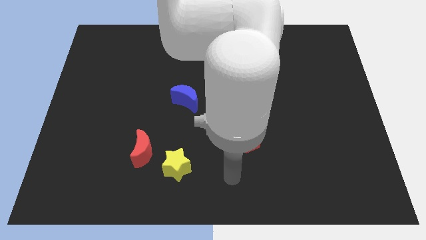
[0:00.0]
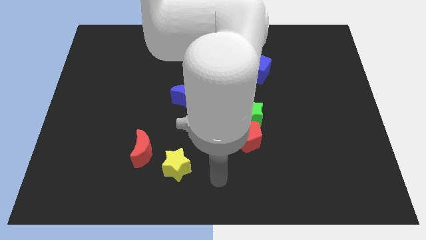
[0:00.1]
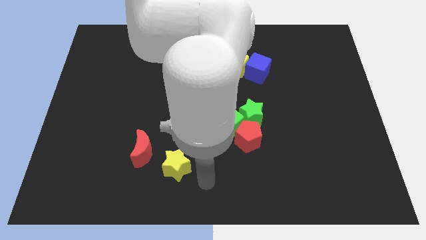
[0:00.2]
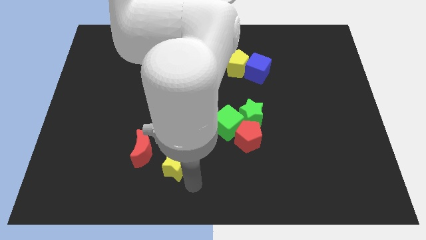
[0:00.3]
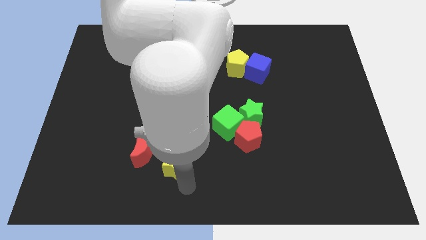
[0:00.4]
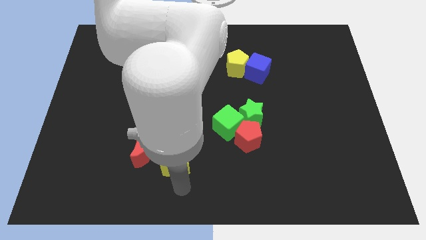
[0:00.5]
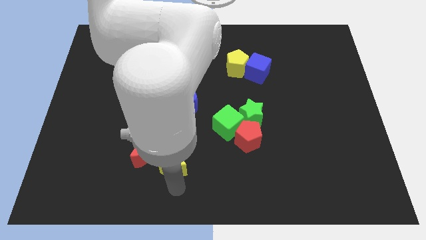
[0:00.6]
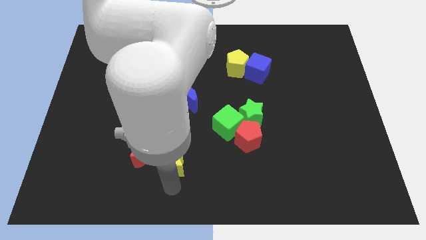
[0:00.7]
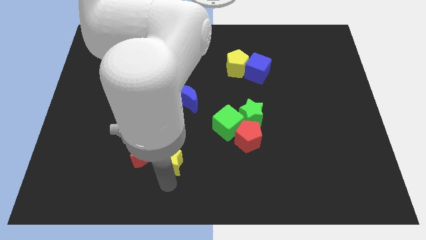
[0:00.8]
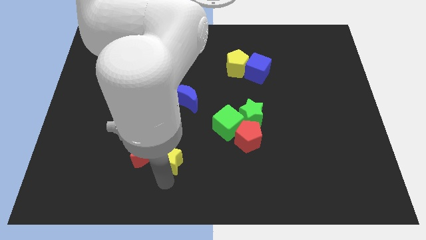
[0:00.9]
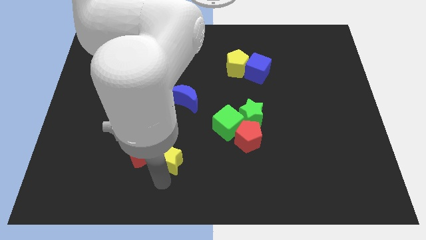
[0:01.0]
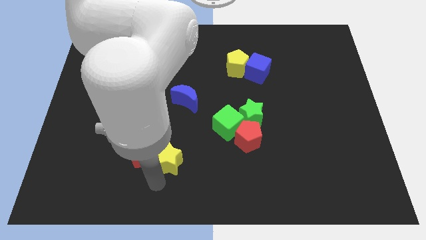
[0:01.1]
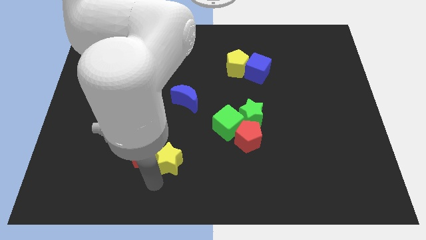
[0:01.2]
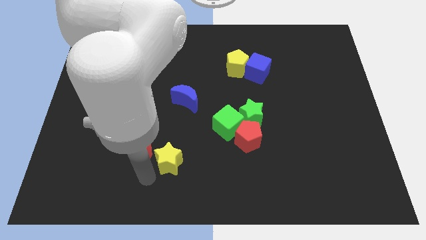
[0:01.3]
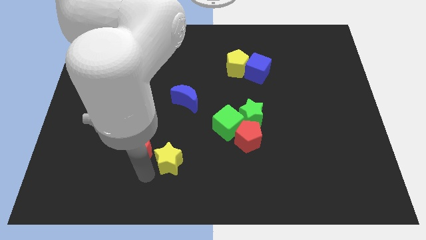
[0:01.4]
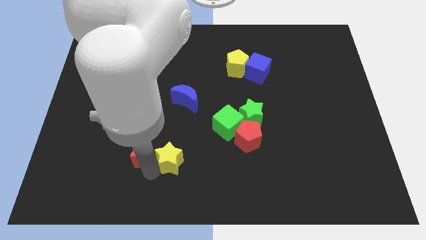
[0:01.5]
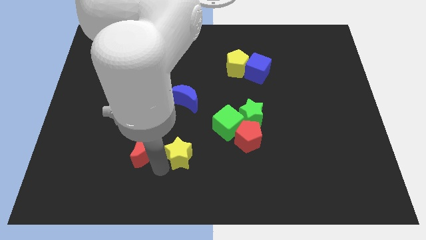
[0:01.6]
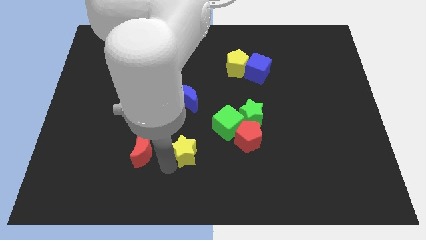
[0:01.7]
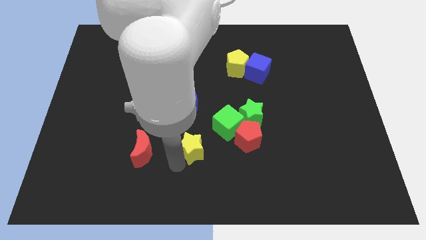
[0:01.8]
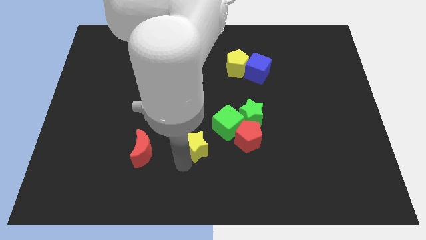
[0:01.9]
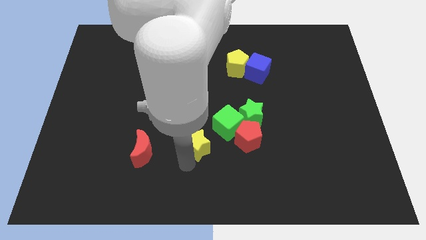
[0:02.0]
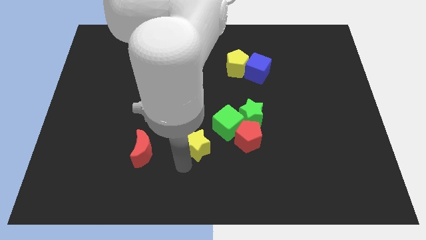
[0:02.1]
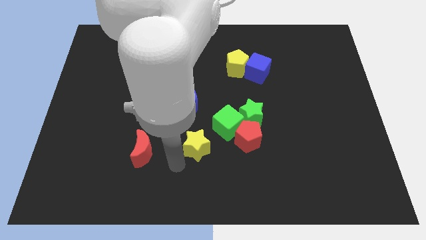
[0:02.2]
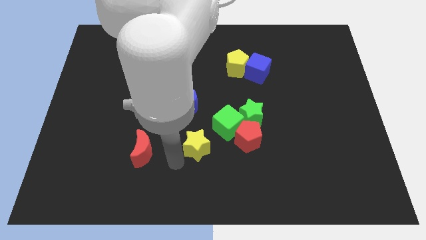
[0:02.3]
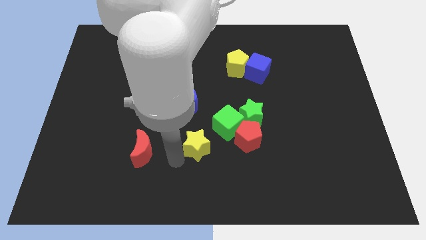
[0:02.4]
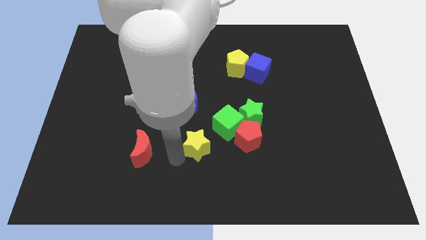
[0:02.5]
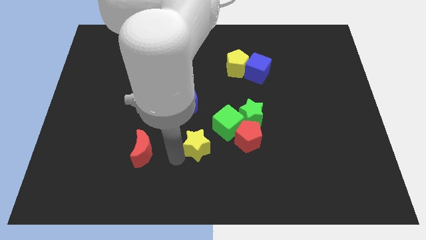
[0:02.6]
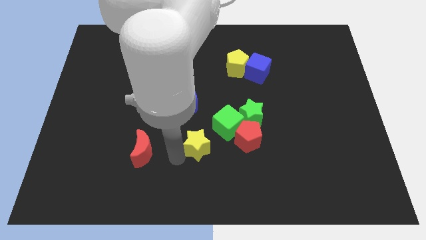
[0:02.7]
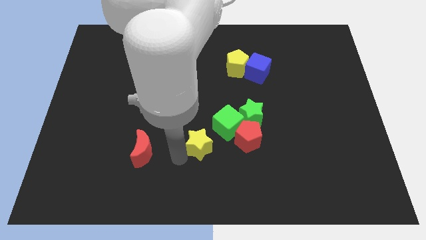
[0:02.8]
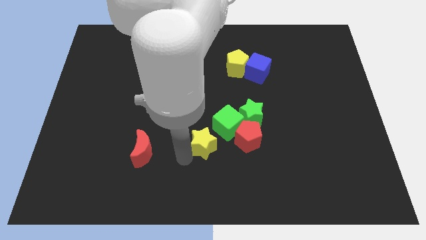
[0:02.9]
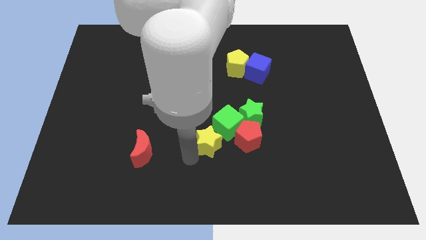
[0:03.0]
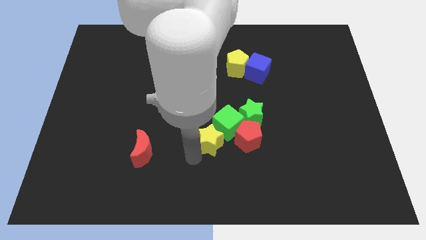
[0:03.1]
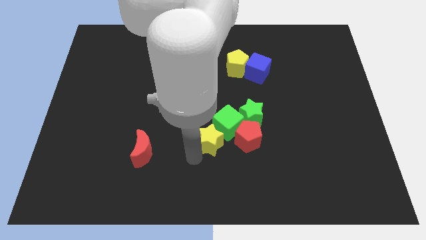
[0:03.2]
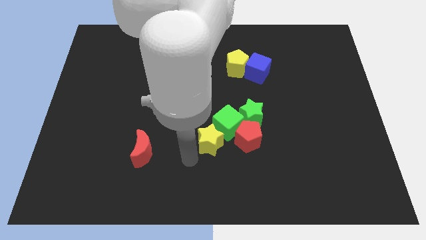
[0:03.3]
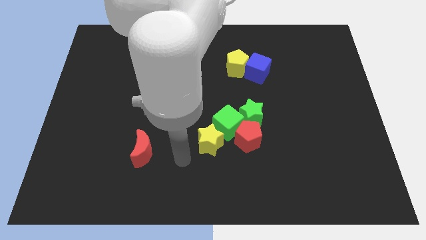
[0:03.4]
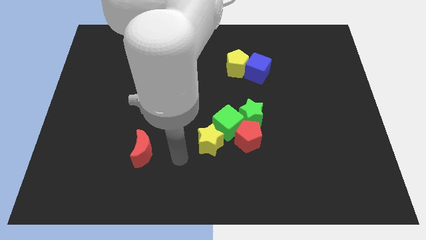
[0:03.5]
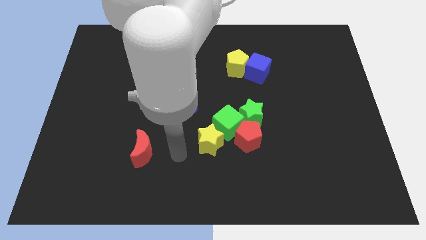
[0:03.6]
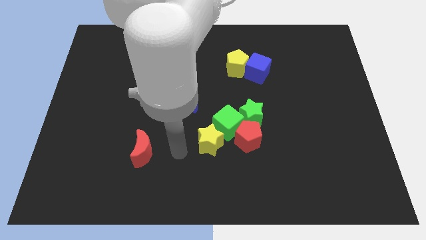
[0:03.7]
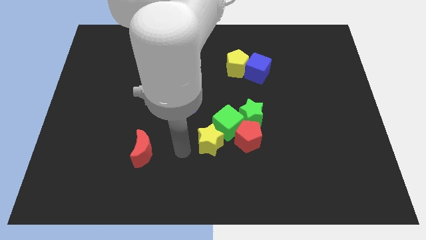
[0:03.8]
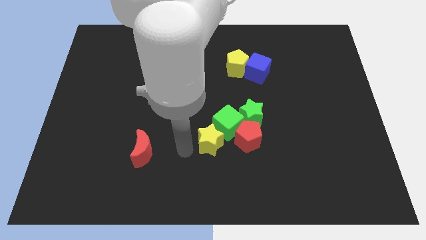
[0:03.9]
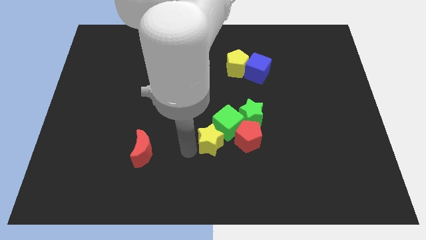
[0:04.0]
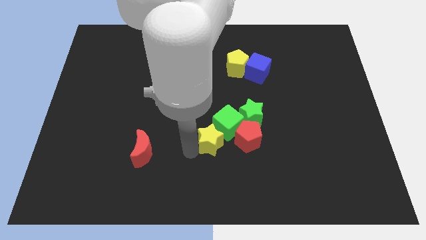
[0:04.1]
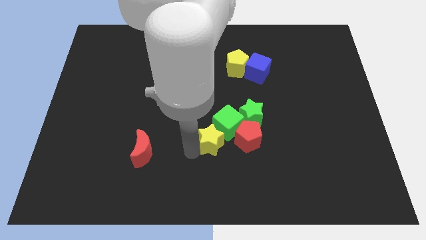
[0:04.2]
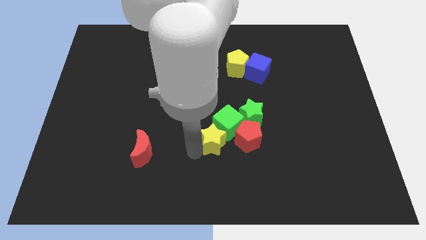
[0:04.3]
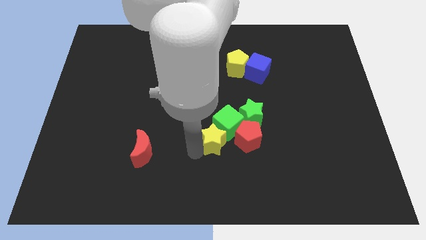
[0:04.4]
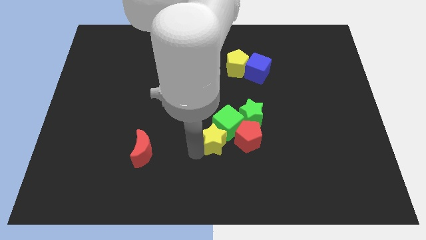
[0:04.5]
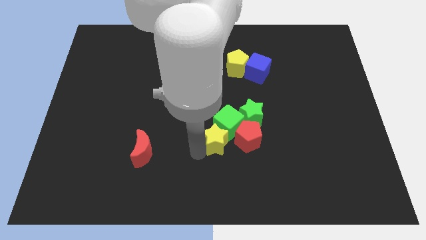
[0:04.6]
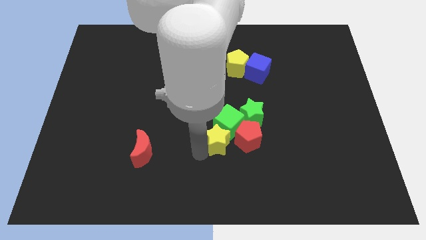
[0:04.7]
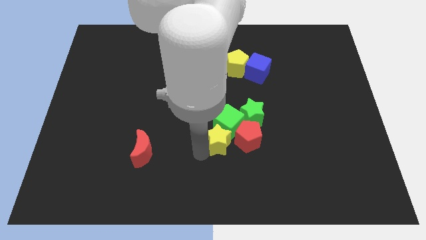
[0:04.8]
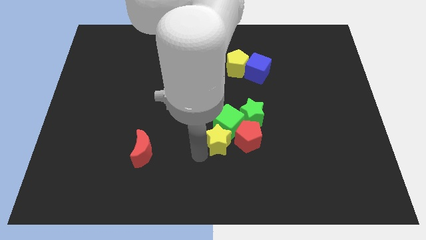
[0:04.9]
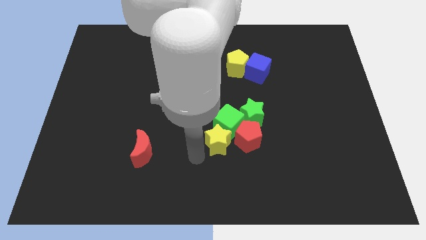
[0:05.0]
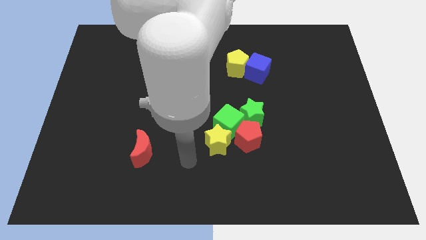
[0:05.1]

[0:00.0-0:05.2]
push the yellow star into the green cube

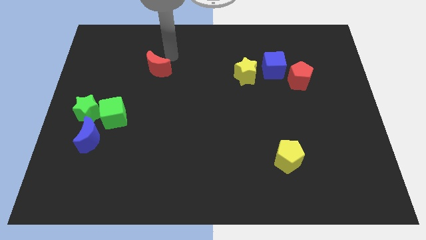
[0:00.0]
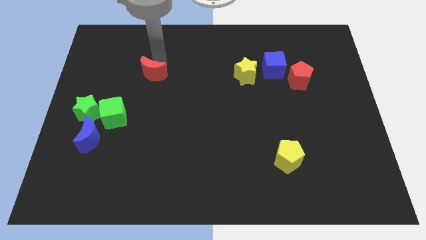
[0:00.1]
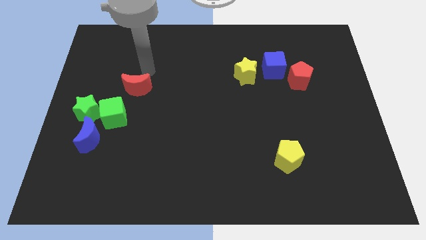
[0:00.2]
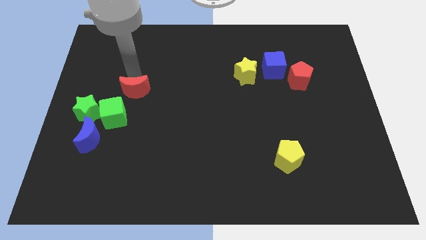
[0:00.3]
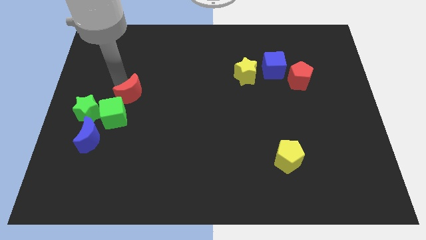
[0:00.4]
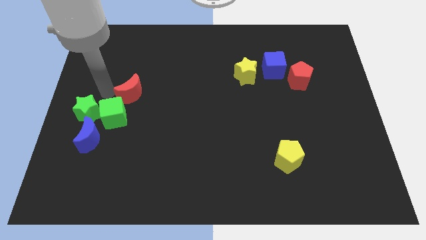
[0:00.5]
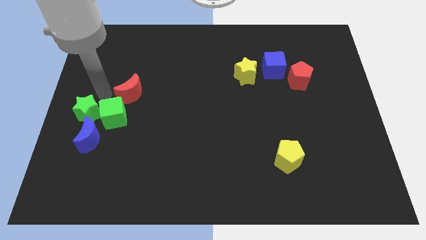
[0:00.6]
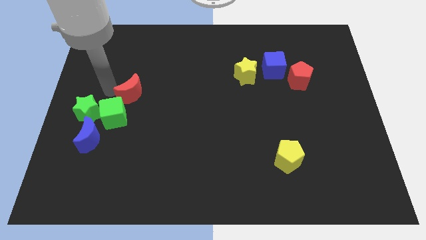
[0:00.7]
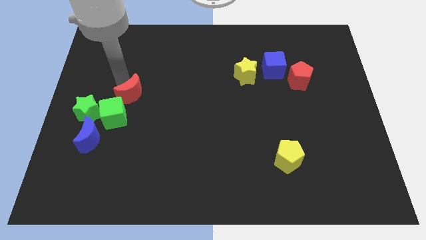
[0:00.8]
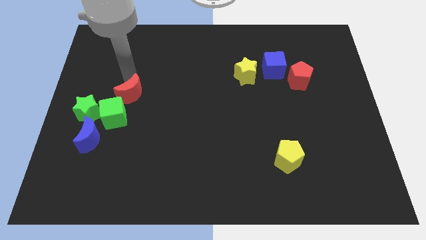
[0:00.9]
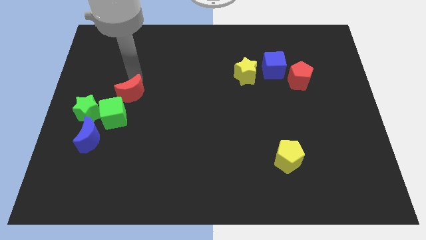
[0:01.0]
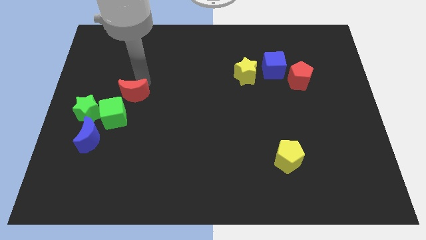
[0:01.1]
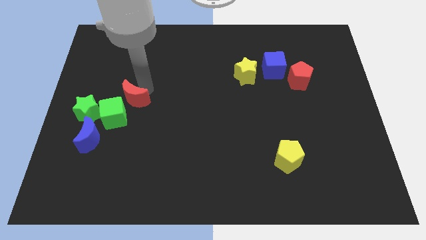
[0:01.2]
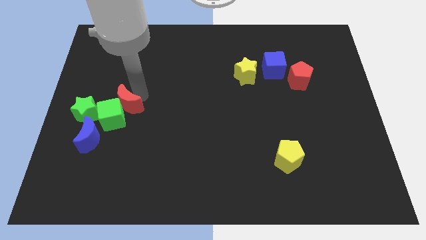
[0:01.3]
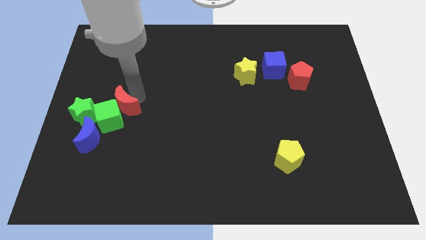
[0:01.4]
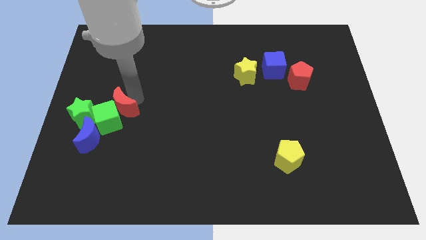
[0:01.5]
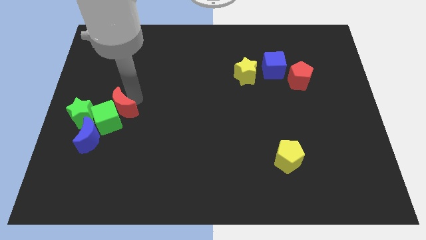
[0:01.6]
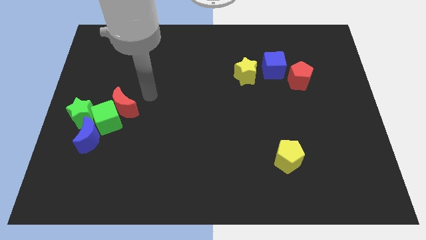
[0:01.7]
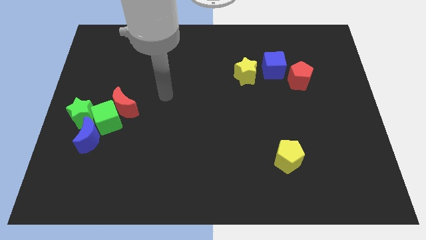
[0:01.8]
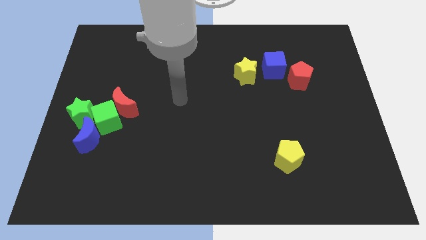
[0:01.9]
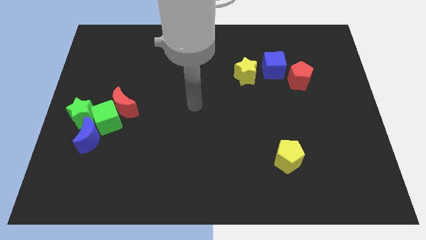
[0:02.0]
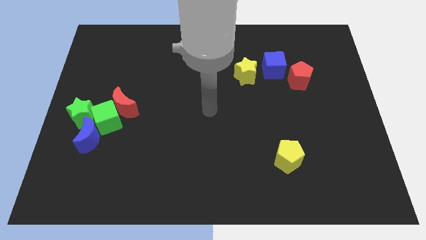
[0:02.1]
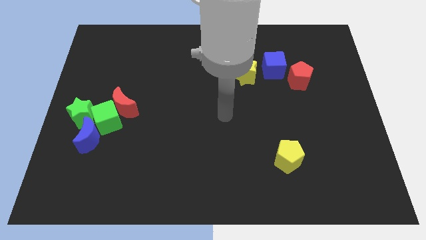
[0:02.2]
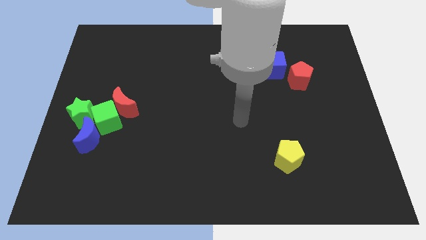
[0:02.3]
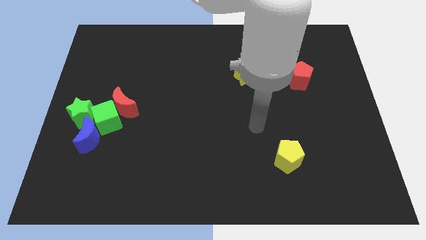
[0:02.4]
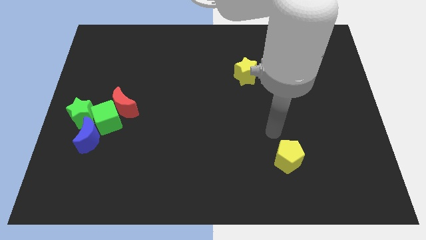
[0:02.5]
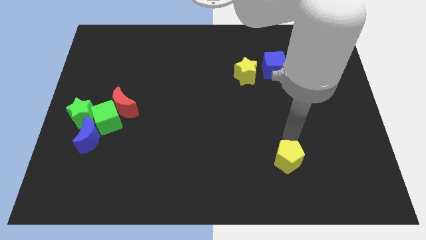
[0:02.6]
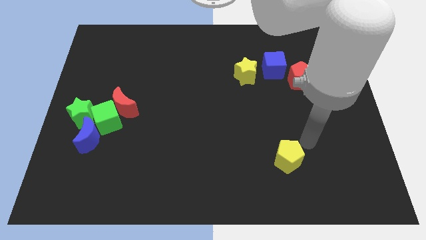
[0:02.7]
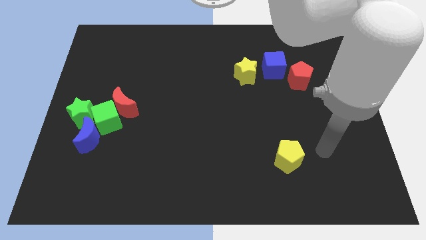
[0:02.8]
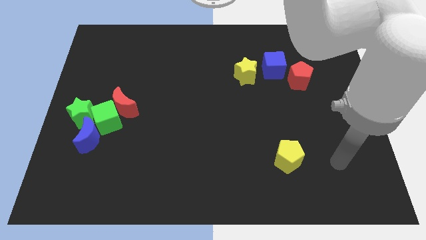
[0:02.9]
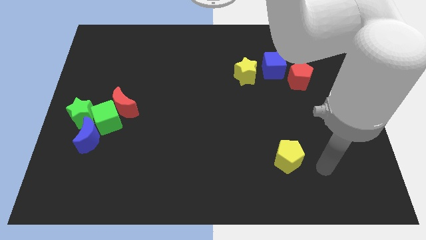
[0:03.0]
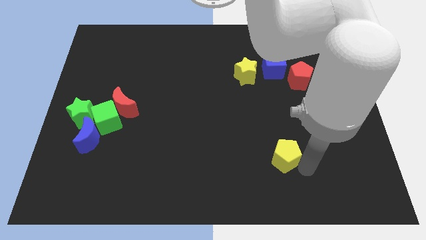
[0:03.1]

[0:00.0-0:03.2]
move the red moon into the green cube

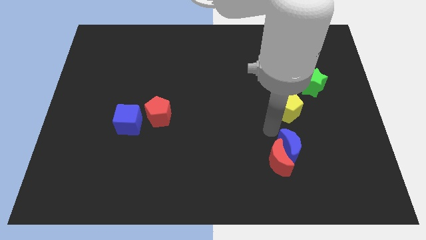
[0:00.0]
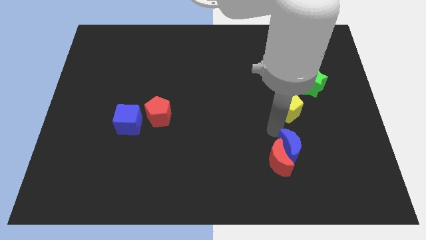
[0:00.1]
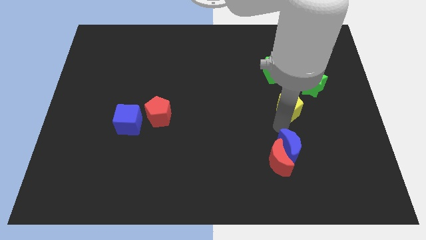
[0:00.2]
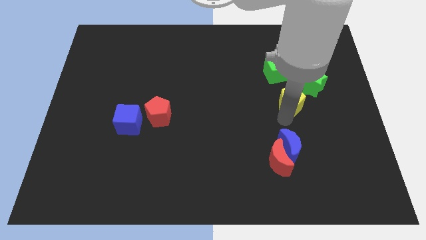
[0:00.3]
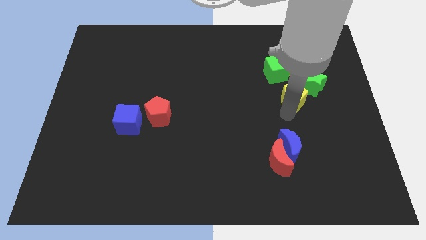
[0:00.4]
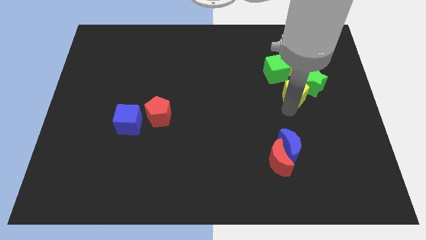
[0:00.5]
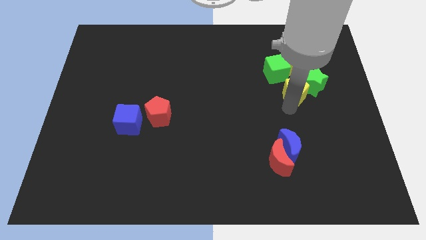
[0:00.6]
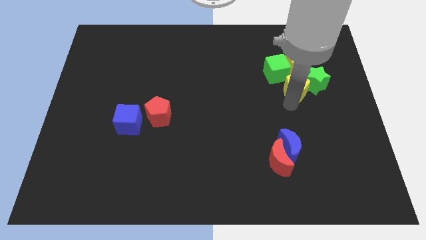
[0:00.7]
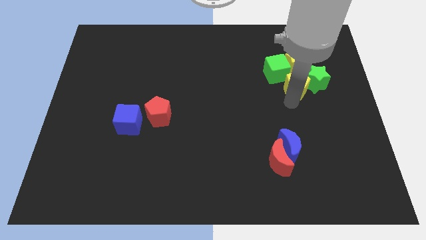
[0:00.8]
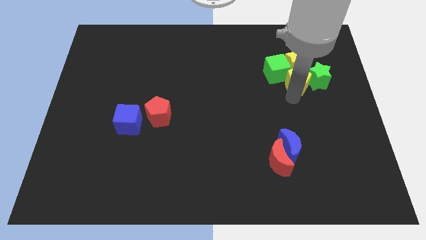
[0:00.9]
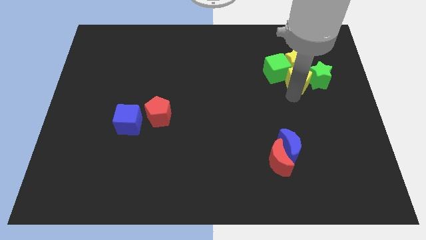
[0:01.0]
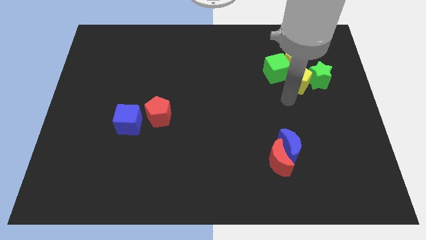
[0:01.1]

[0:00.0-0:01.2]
move the yellow pentagon into the bottom side of the yellow star
